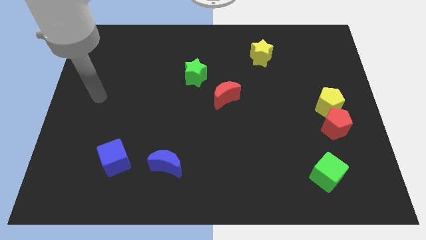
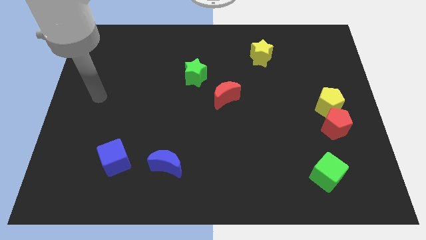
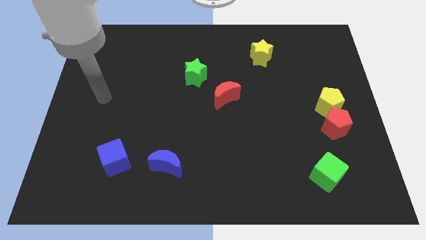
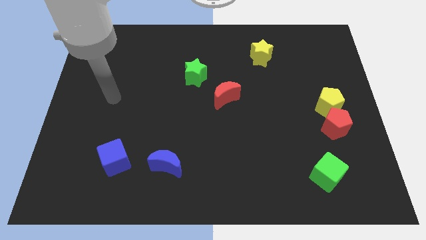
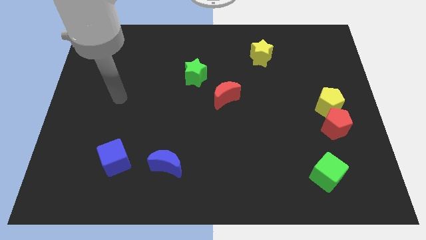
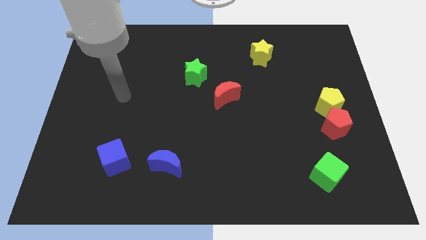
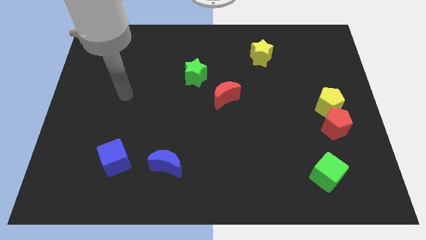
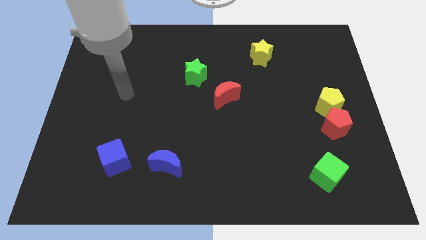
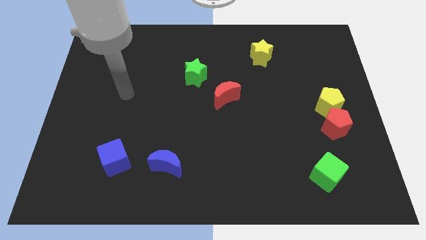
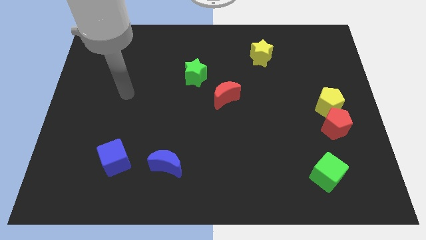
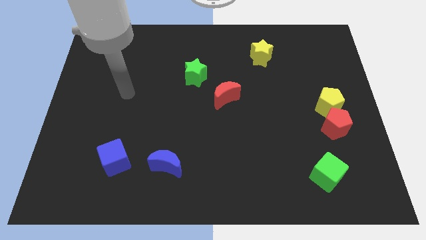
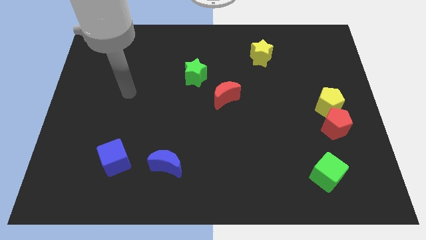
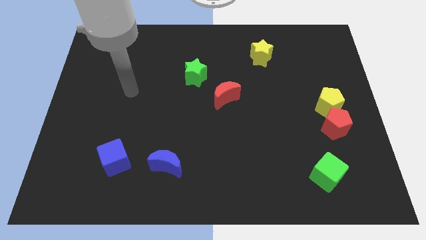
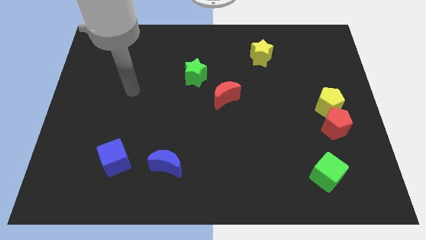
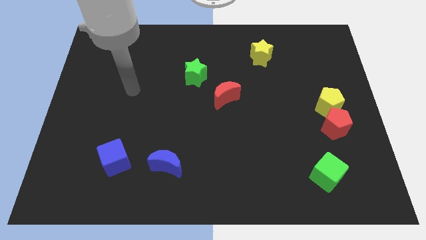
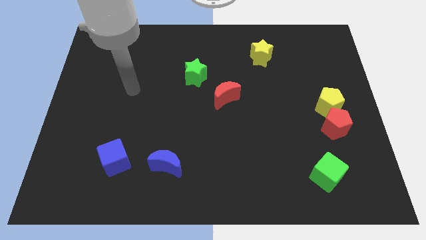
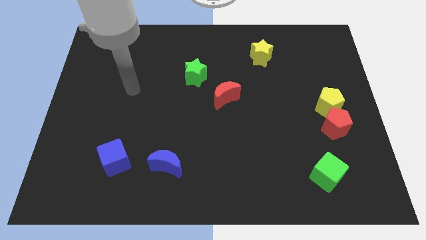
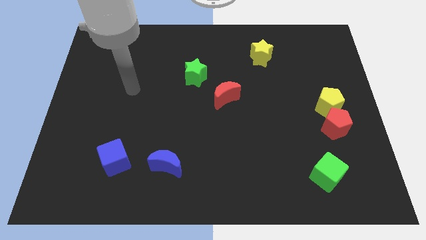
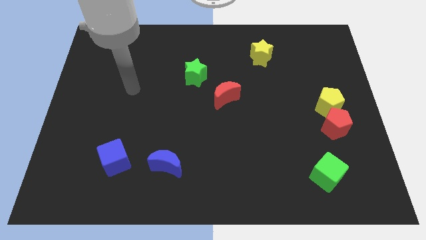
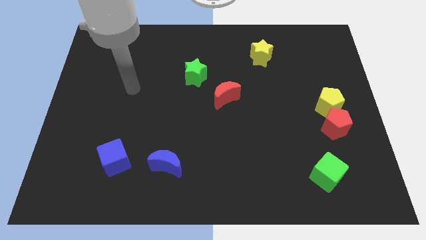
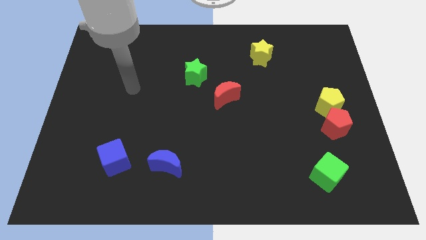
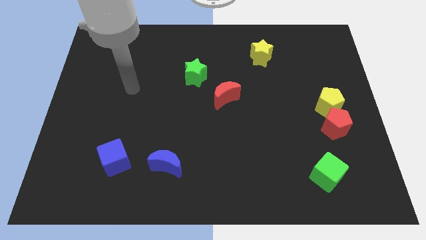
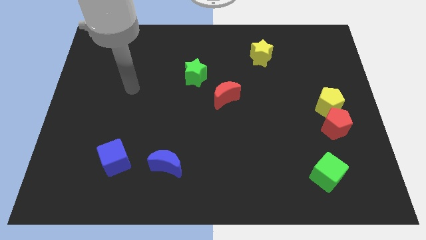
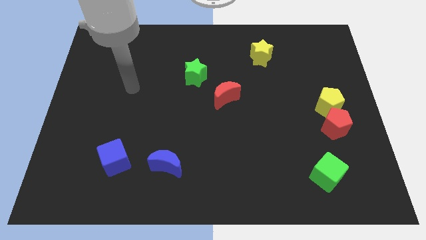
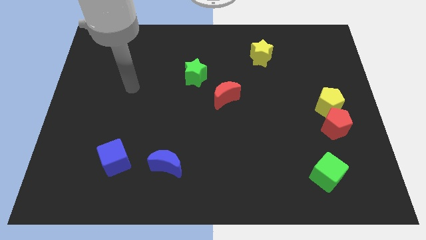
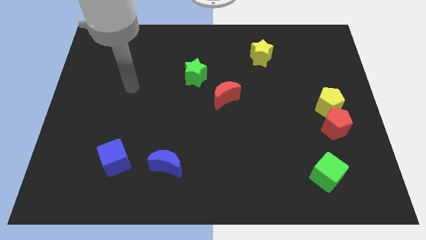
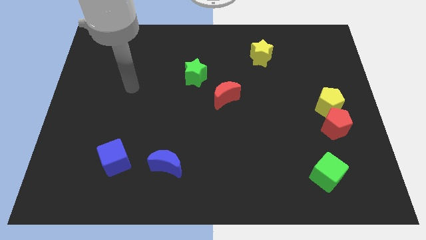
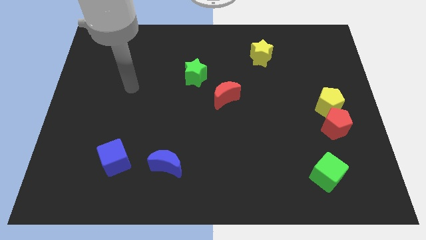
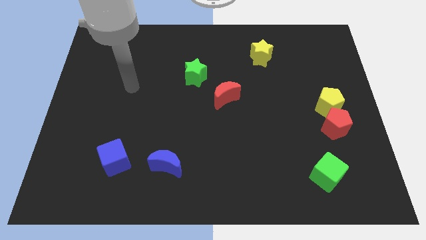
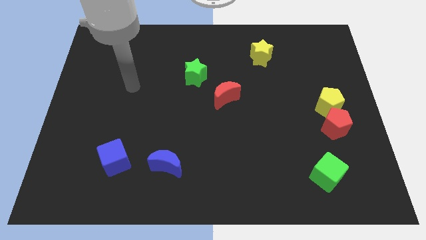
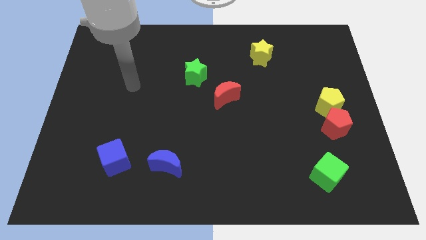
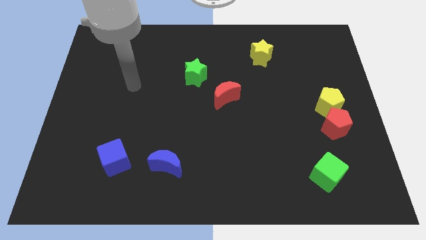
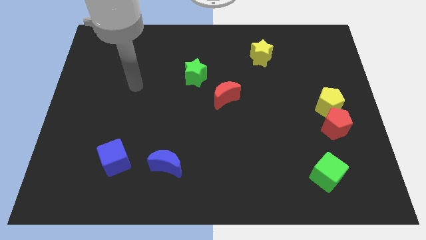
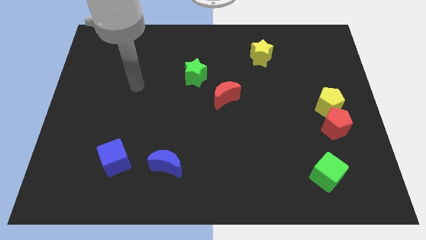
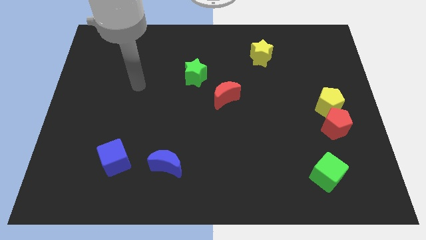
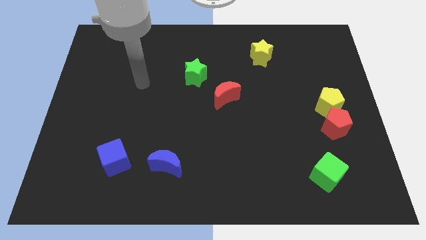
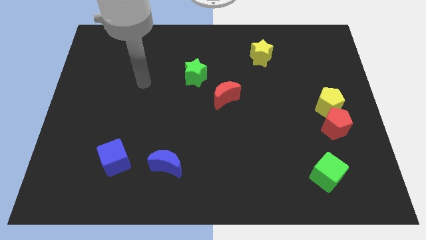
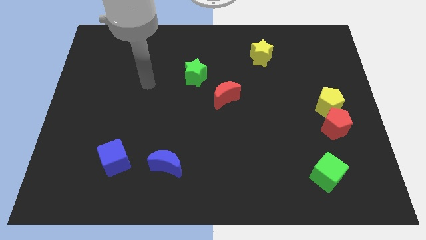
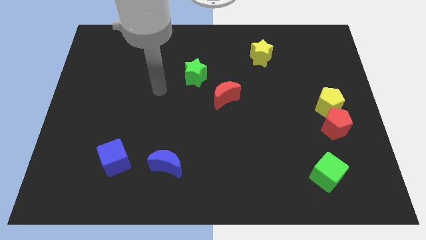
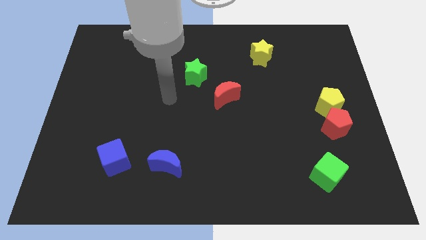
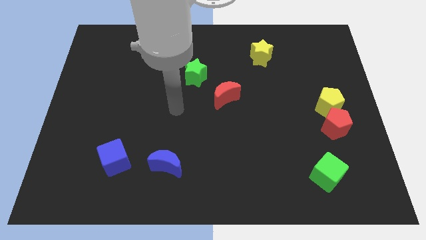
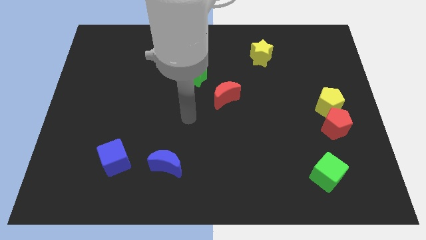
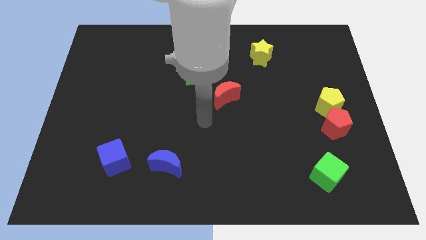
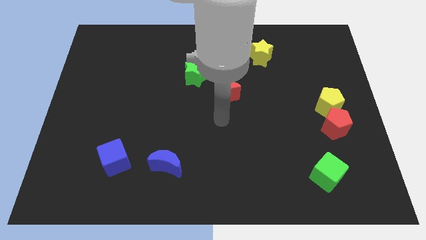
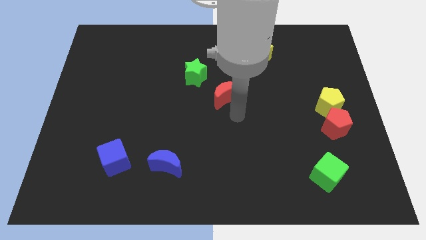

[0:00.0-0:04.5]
move your arm from the left center to the center of the board

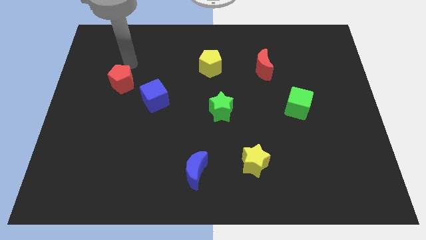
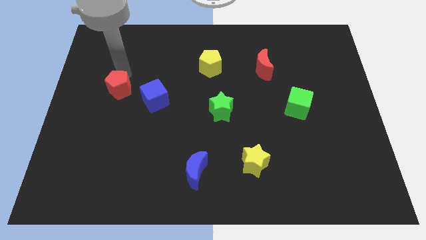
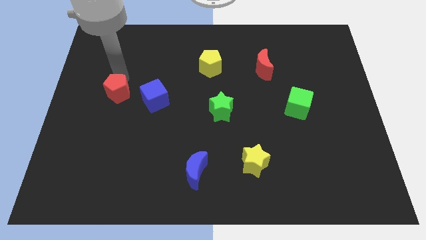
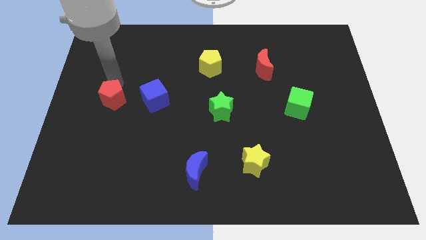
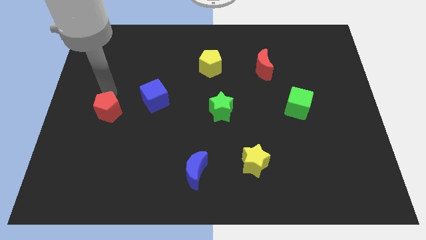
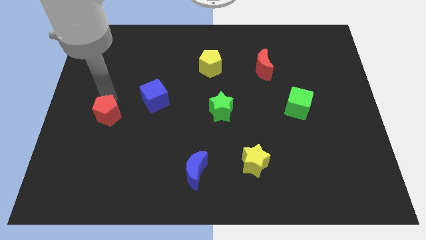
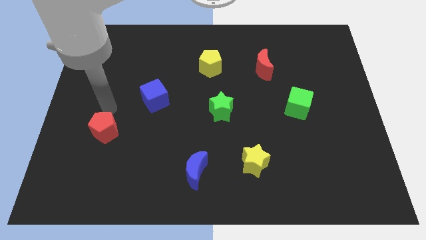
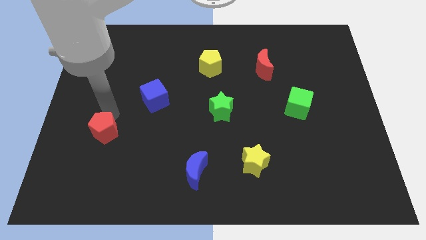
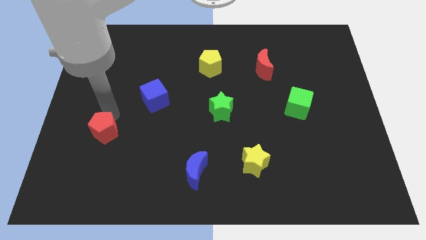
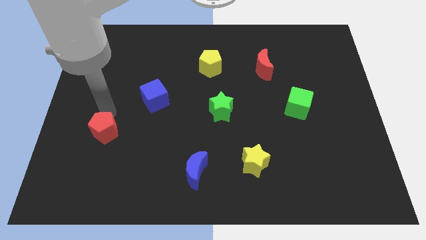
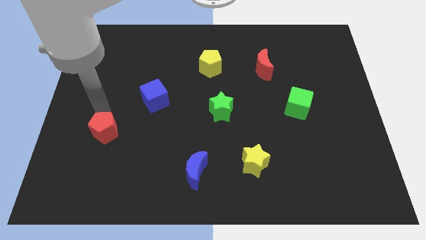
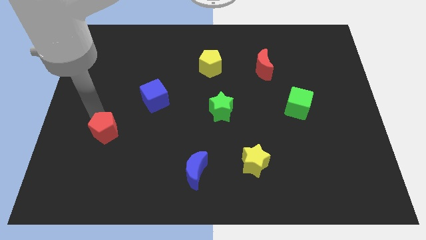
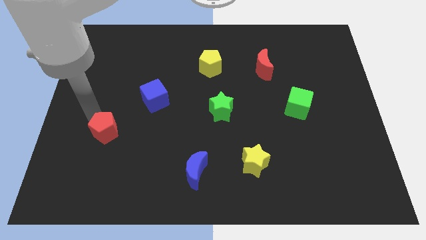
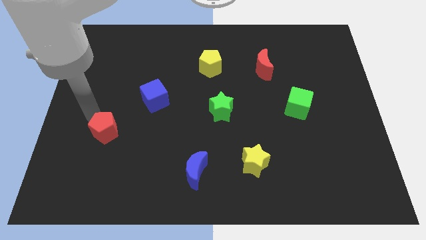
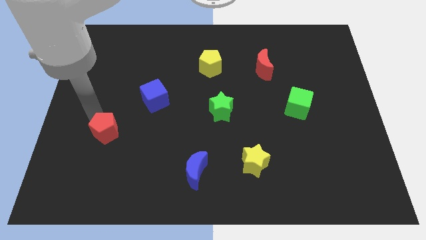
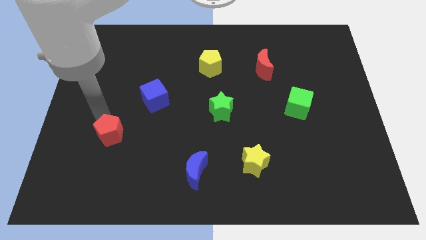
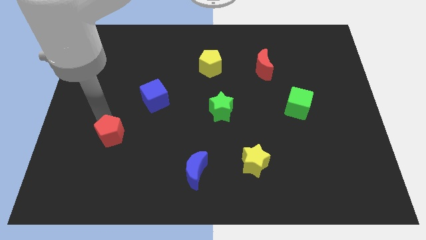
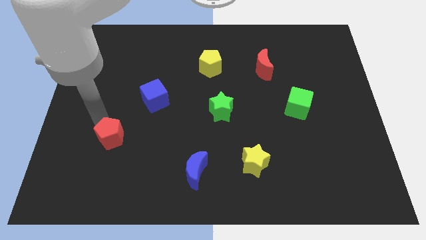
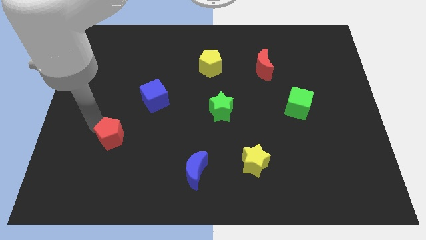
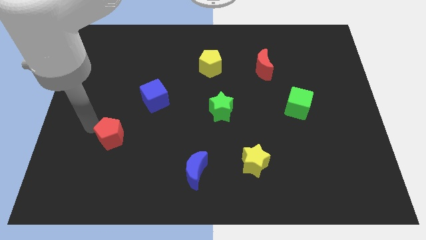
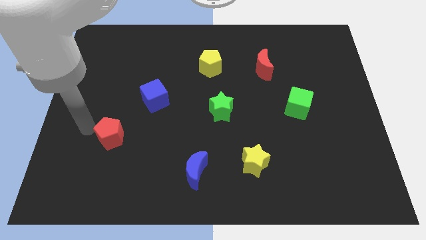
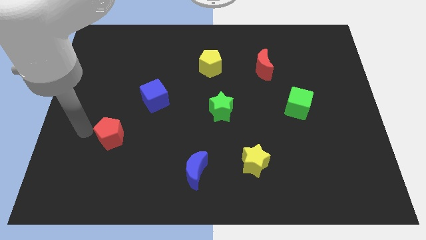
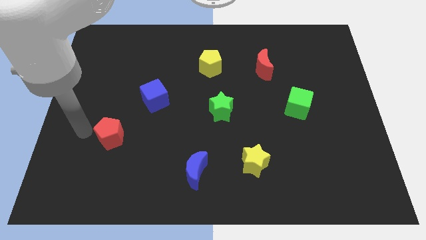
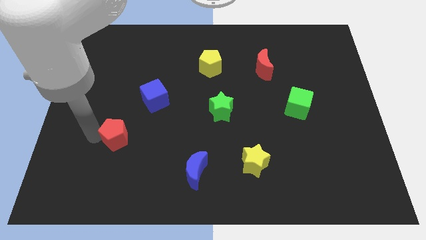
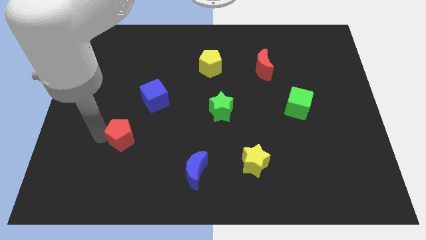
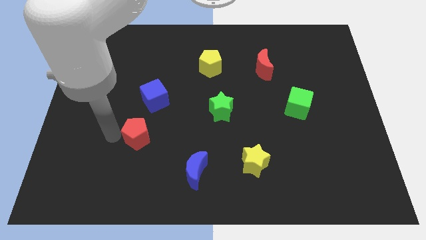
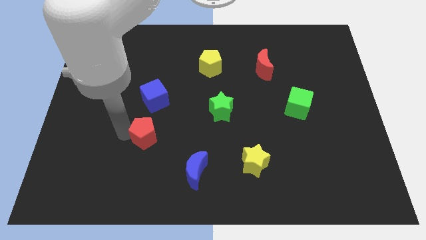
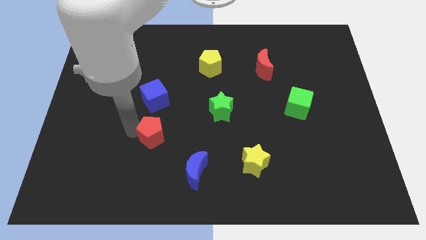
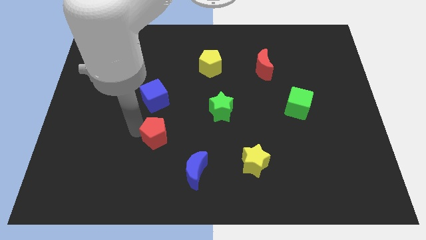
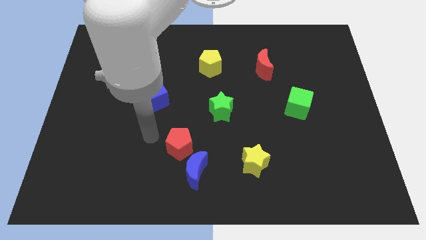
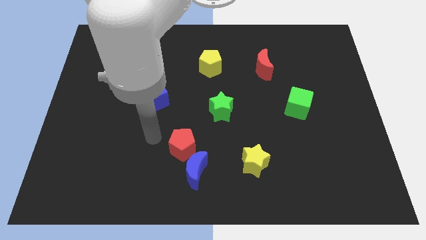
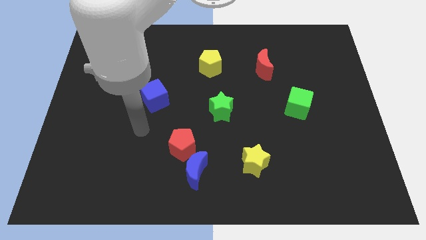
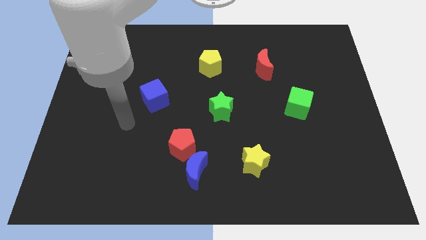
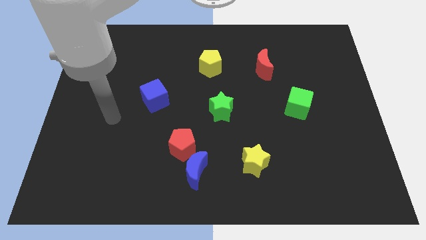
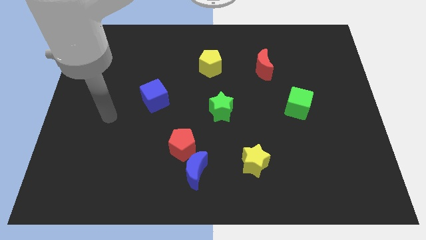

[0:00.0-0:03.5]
move the red pentagon in between the blue cube and blue moon

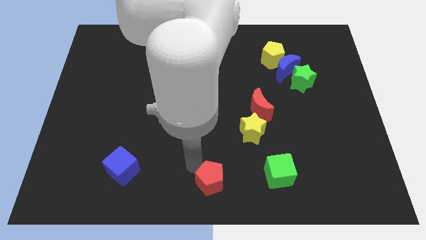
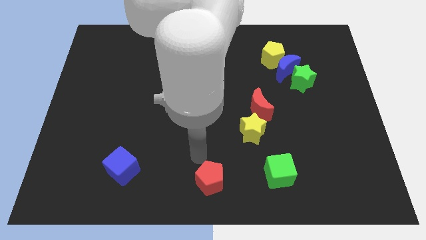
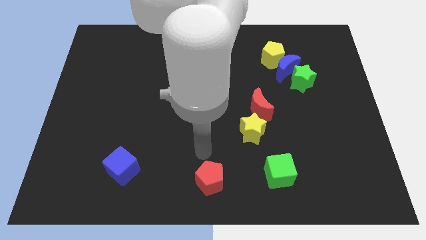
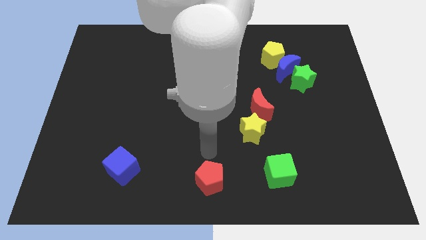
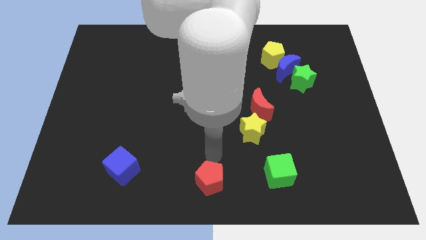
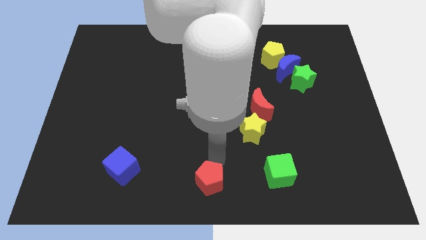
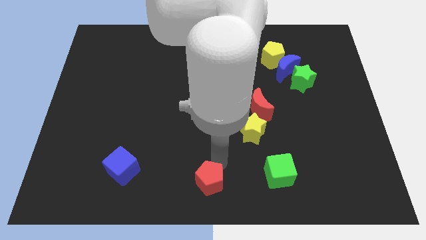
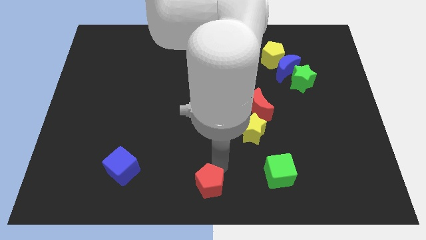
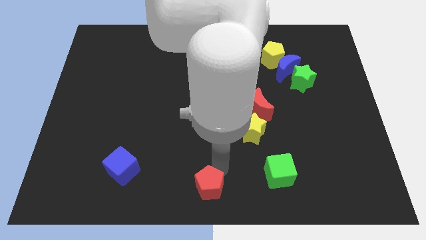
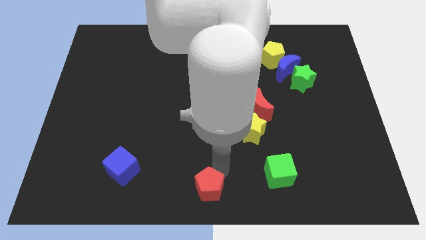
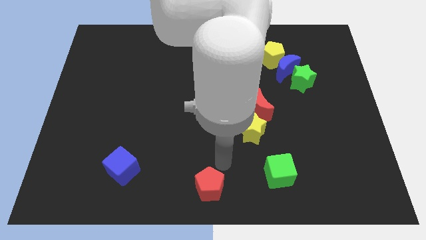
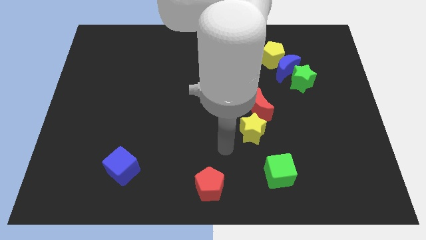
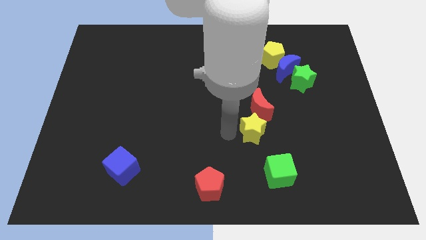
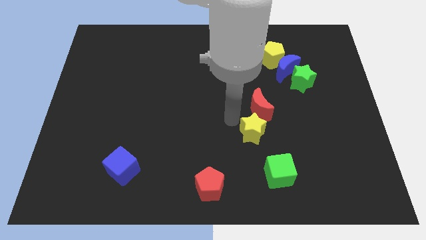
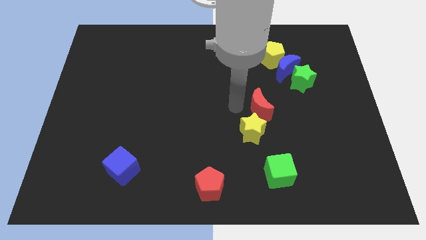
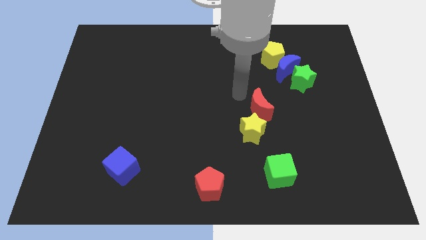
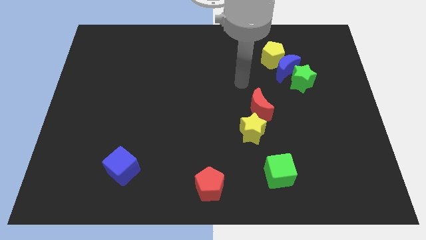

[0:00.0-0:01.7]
move the red pentagon to bottom center
